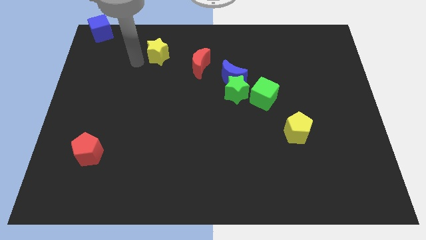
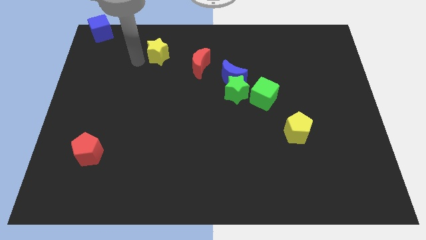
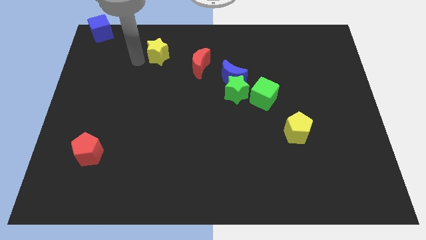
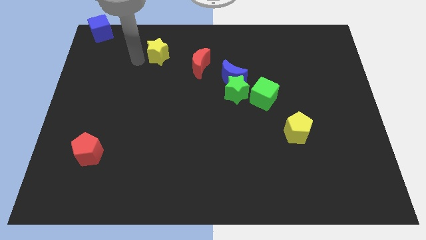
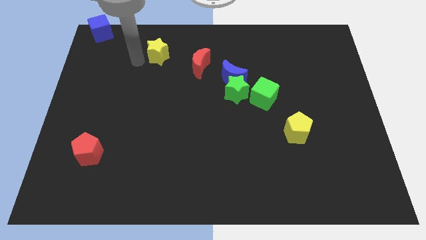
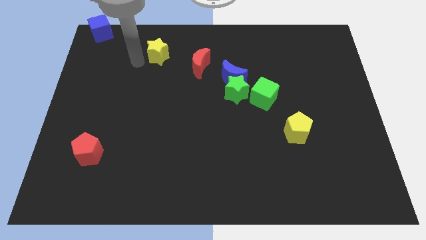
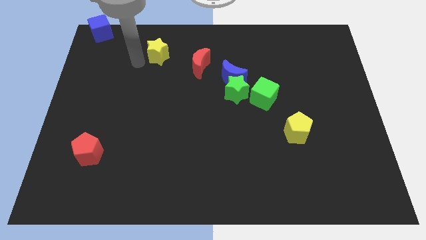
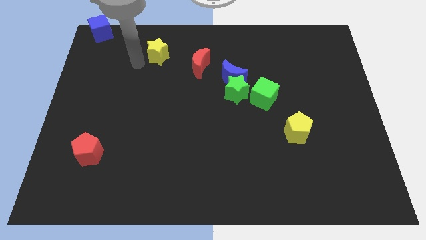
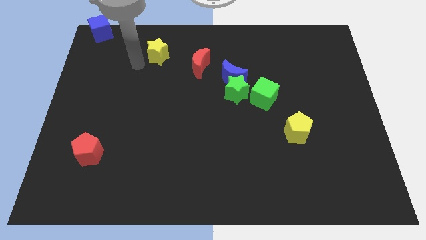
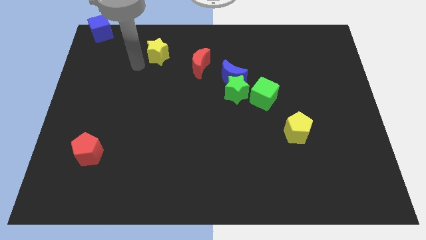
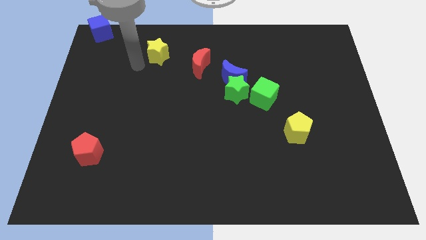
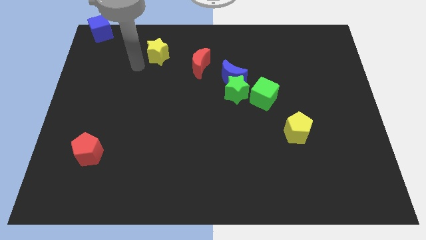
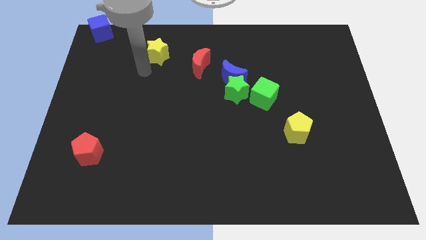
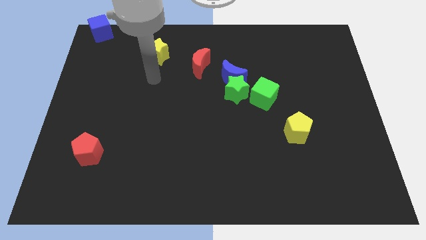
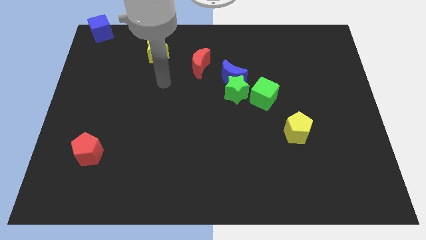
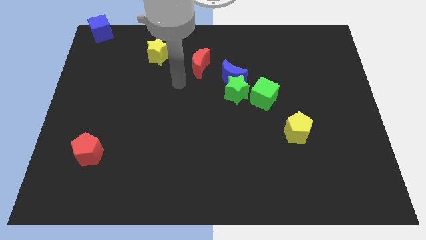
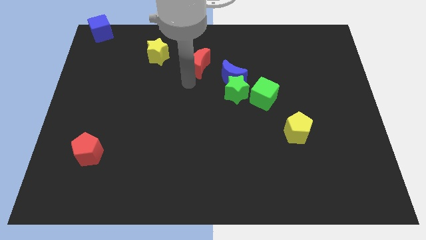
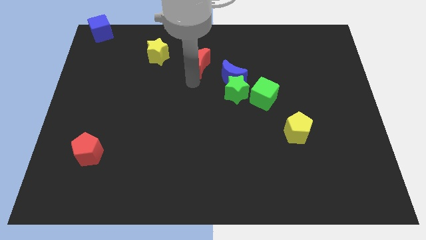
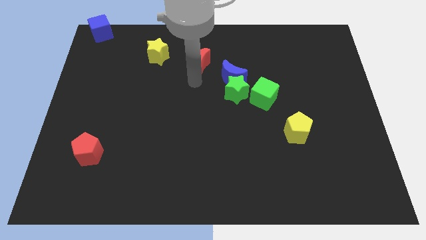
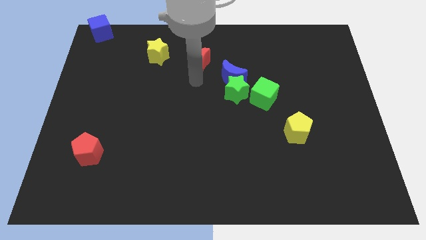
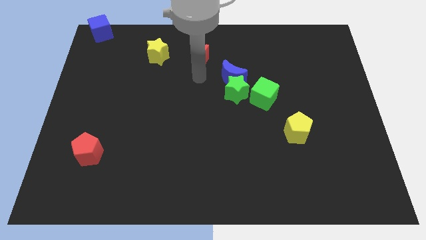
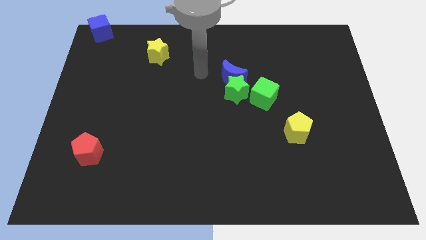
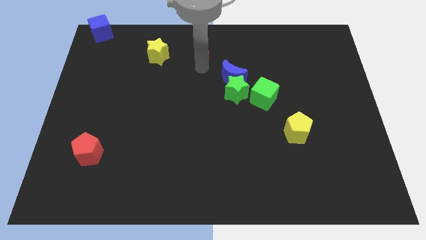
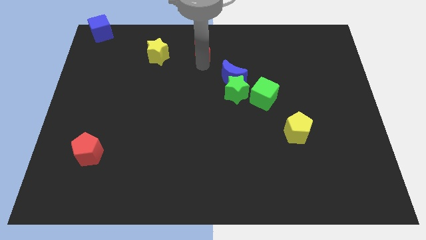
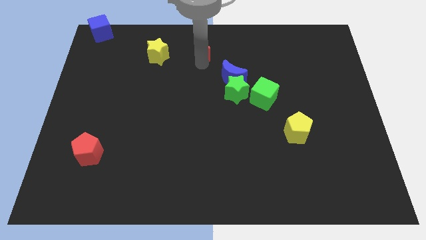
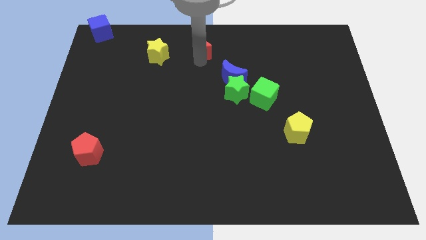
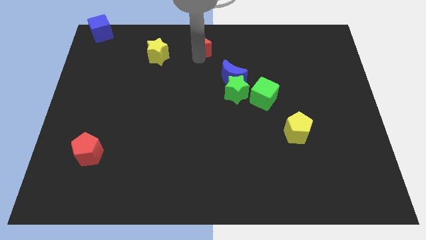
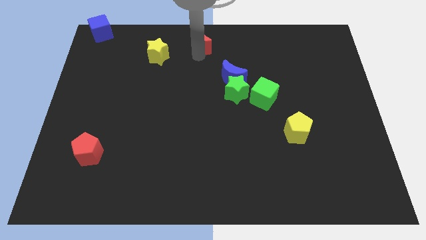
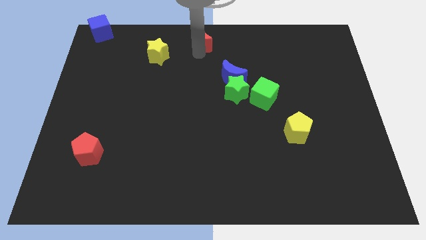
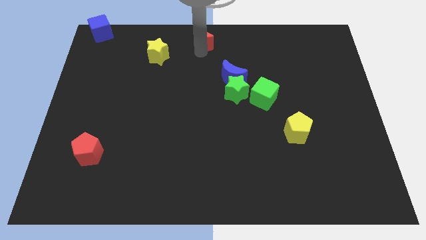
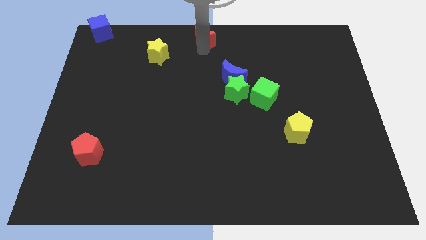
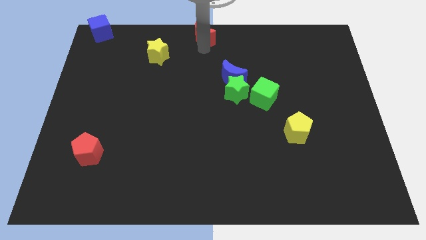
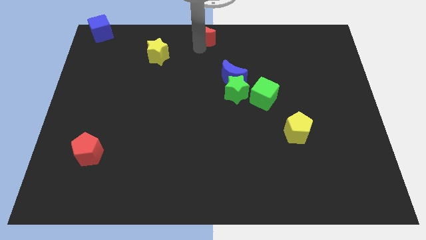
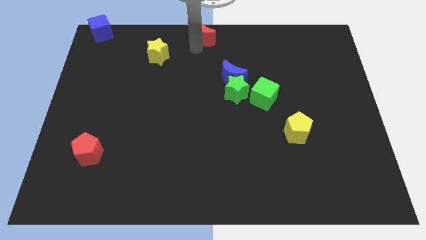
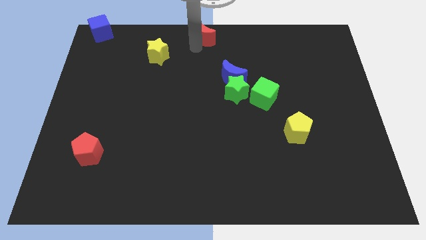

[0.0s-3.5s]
place the red crescent towards the top centre of the board

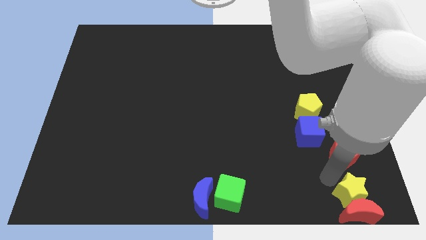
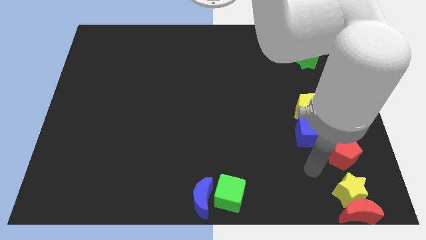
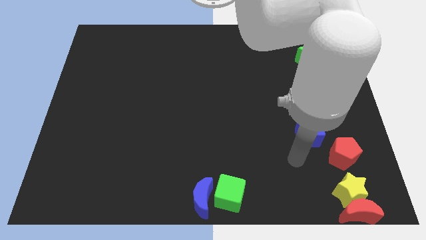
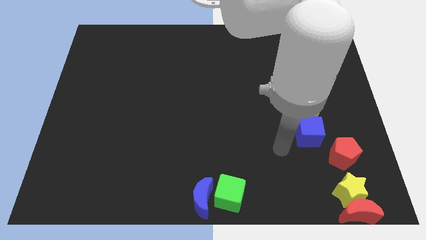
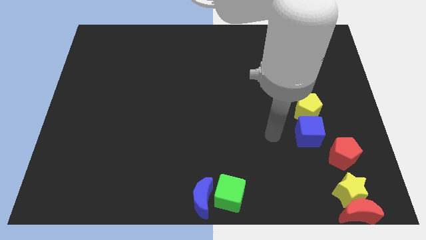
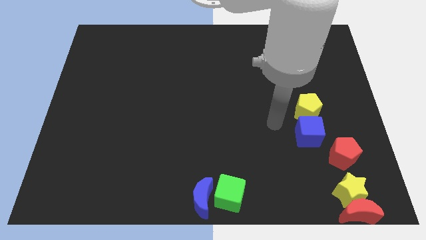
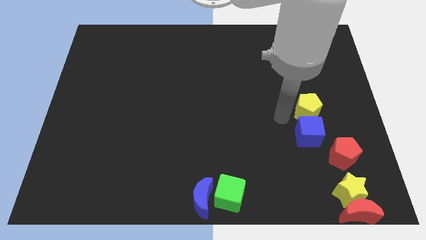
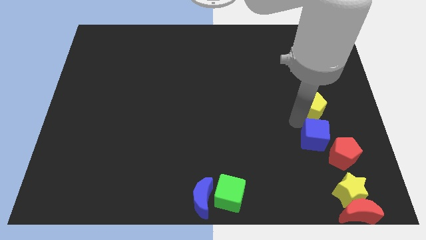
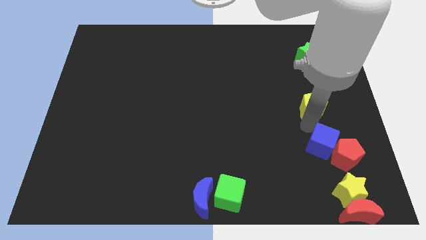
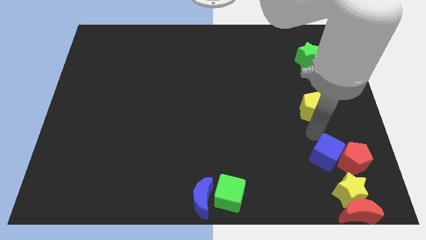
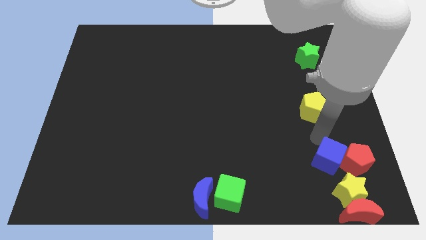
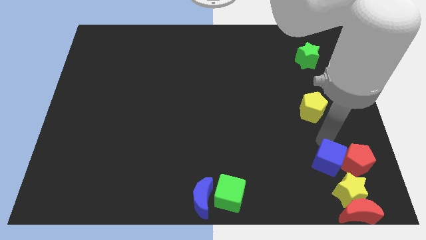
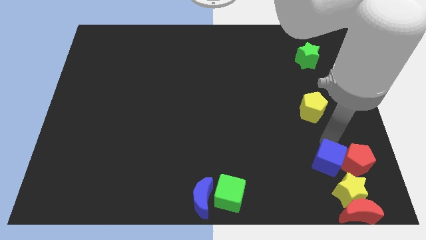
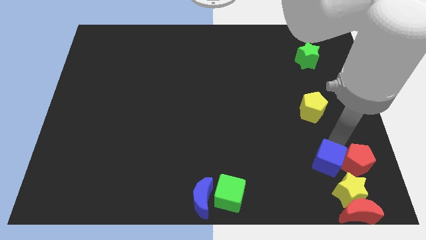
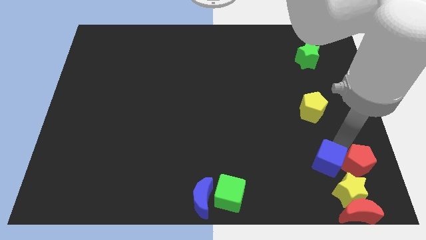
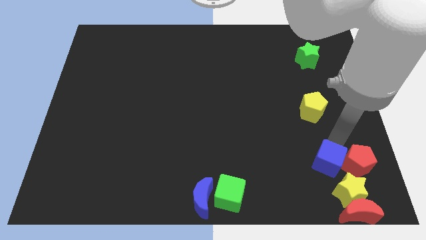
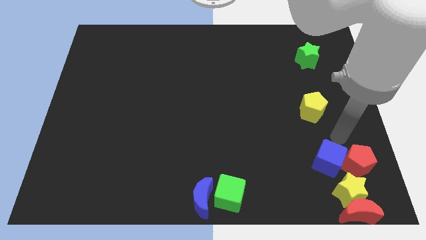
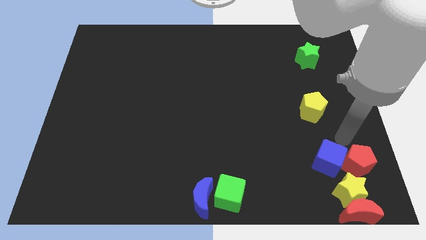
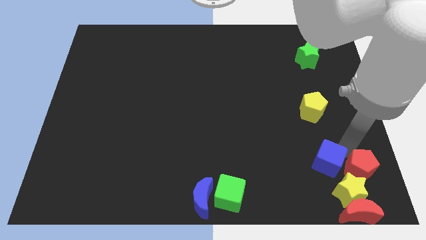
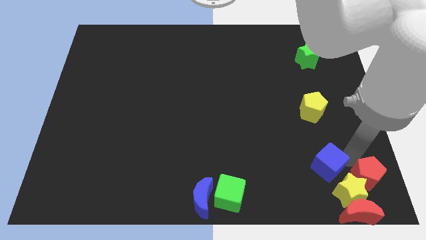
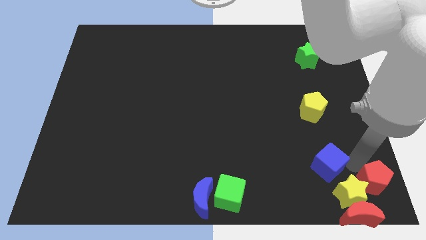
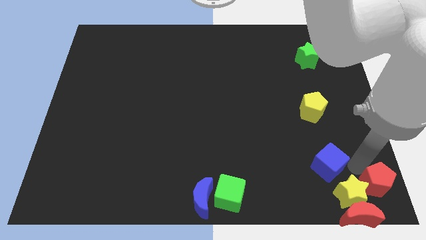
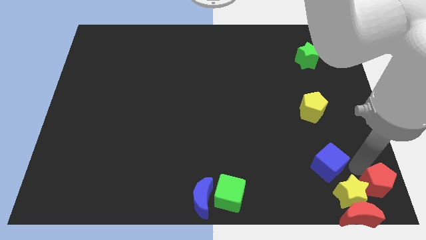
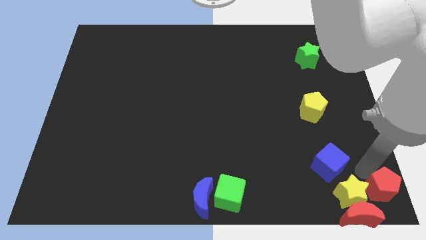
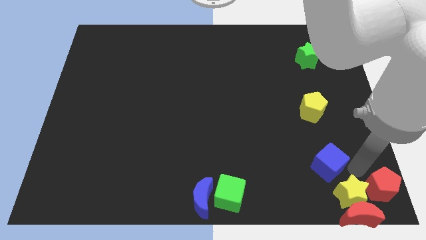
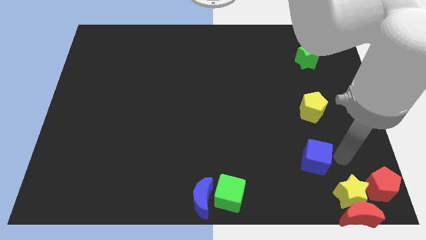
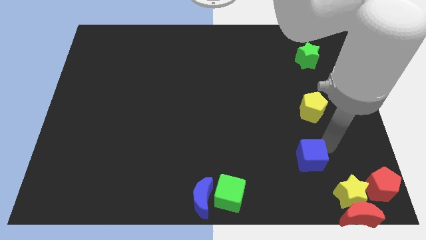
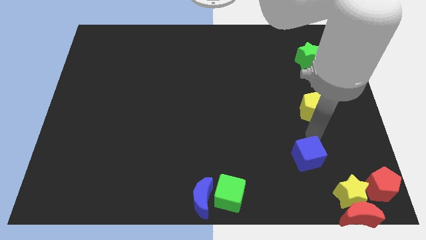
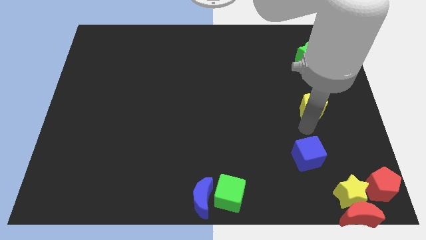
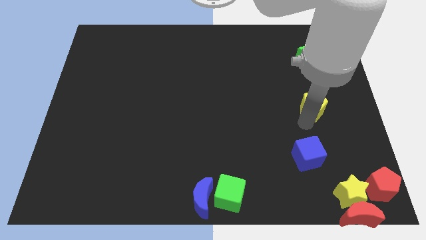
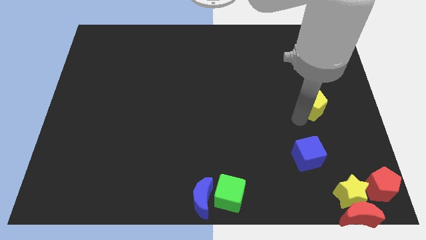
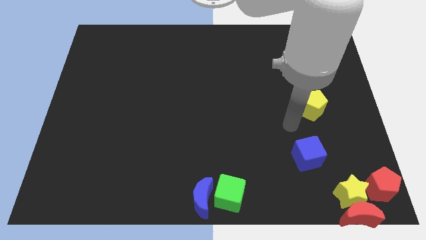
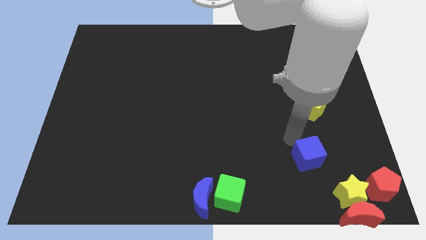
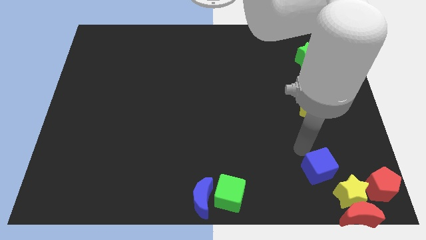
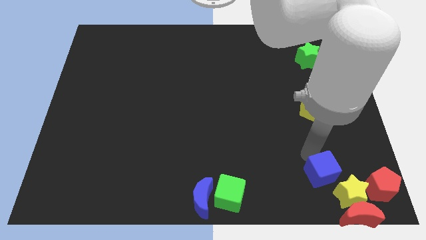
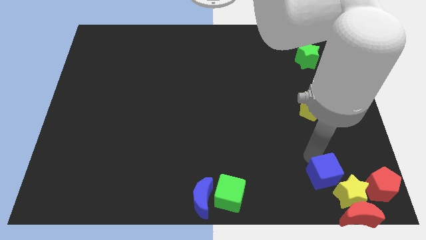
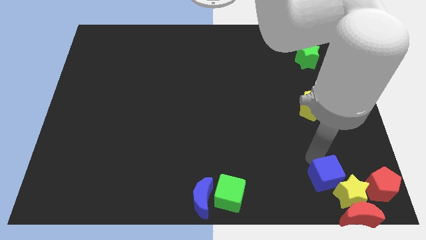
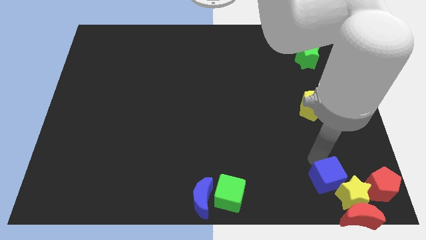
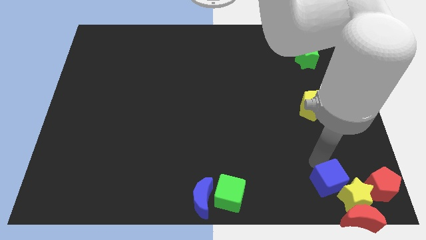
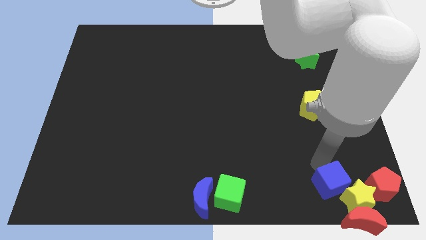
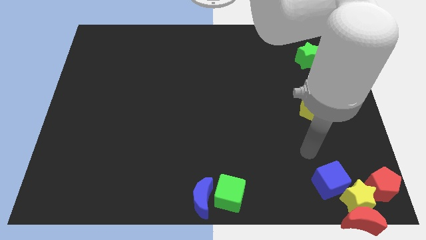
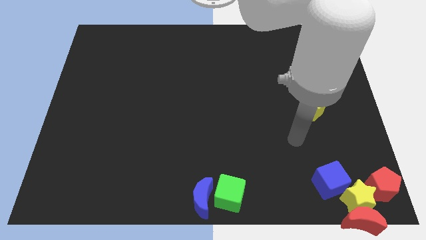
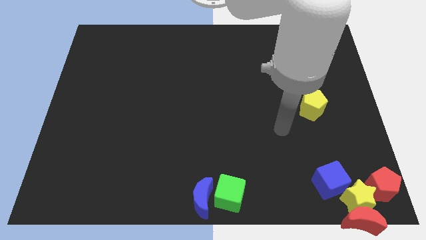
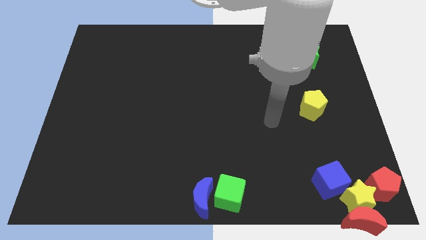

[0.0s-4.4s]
push the blue cube and the red pentagon into the yellow star

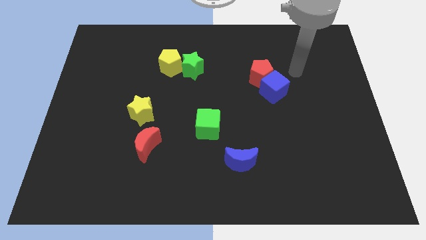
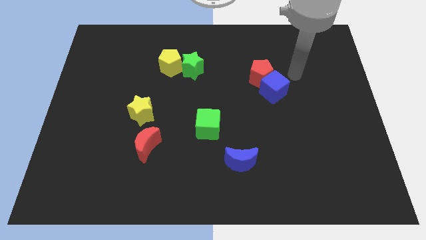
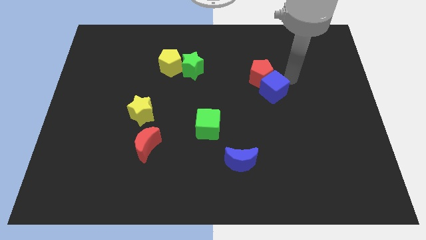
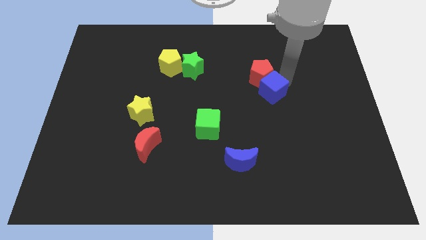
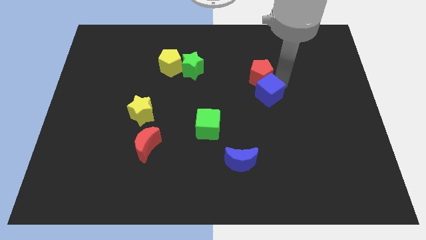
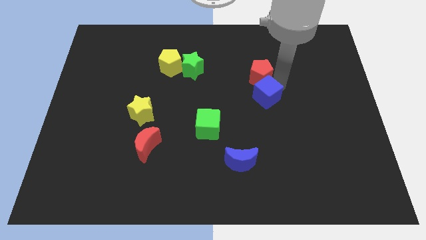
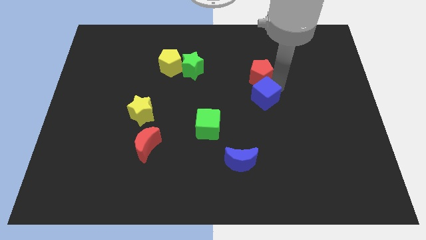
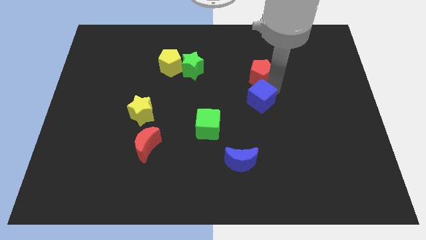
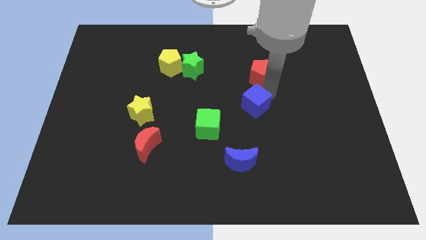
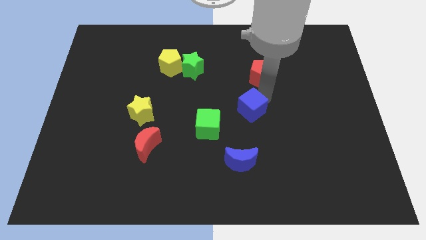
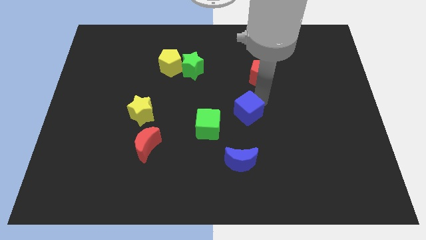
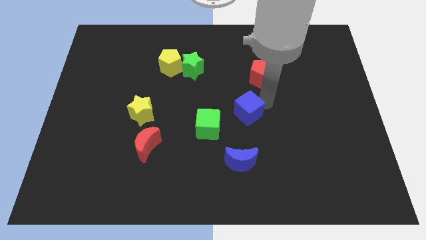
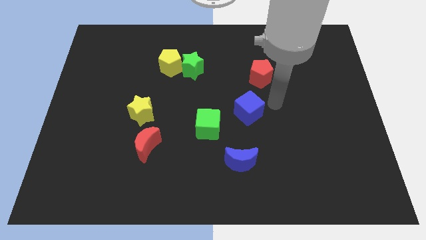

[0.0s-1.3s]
separate the blue cube from the red pentagon
